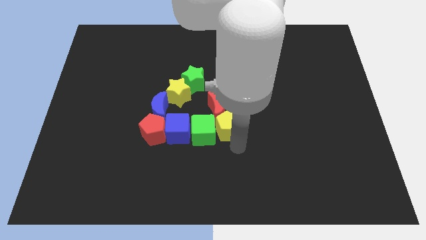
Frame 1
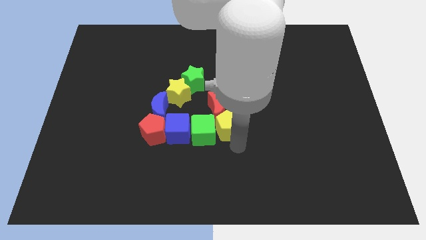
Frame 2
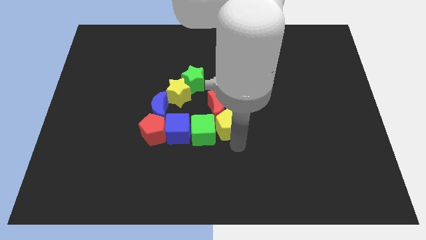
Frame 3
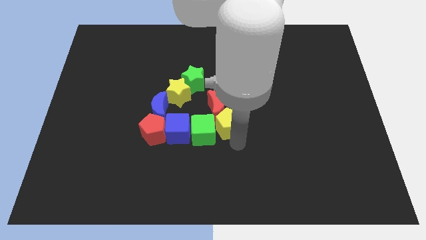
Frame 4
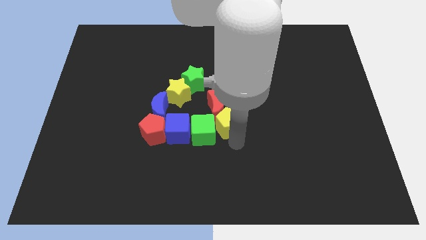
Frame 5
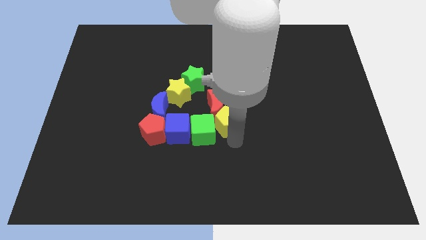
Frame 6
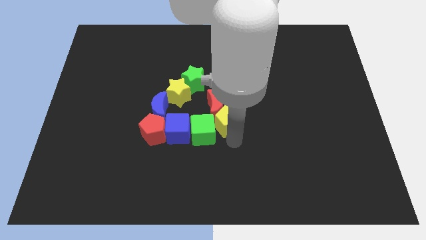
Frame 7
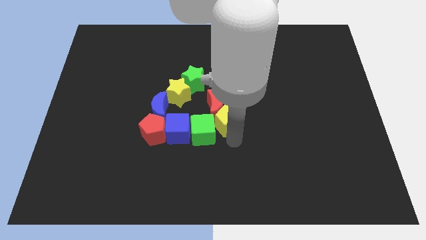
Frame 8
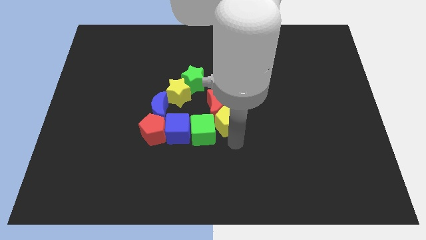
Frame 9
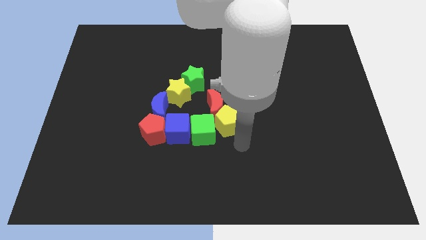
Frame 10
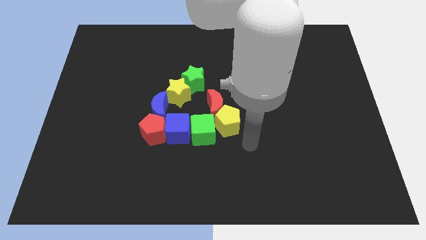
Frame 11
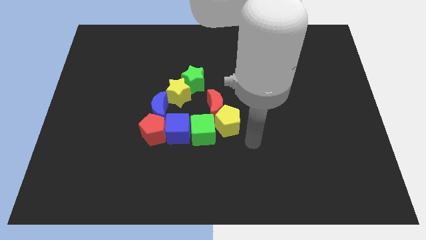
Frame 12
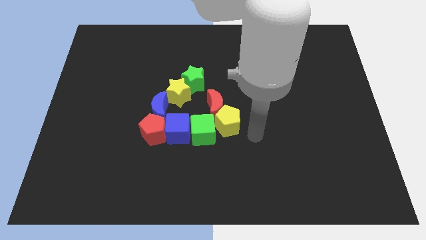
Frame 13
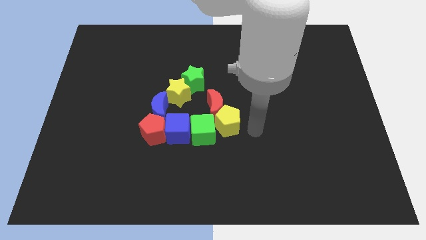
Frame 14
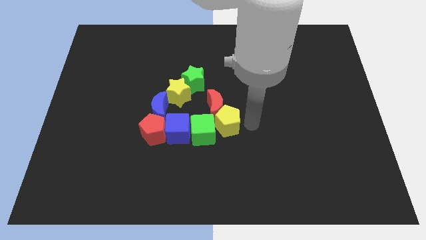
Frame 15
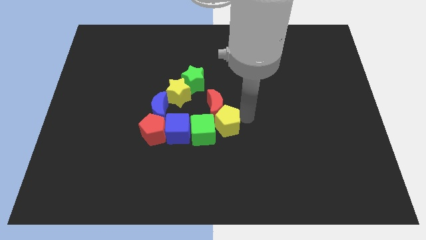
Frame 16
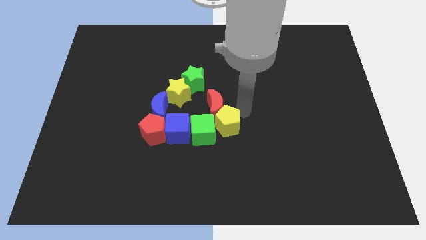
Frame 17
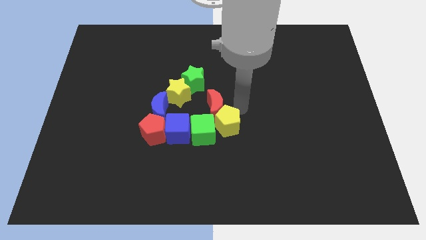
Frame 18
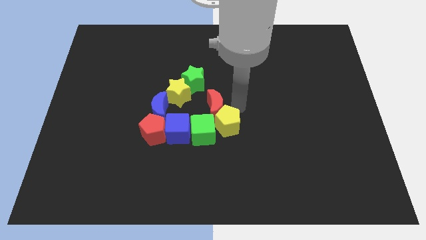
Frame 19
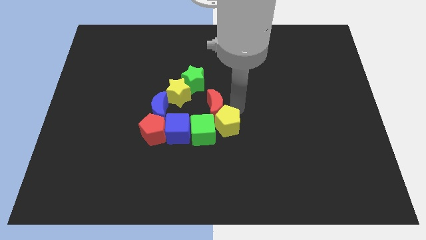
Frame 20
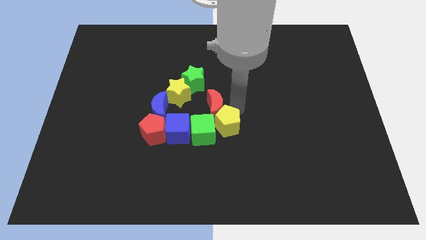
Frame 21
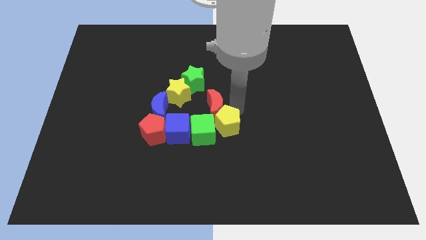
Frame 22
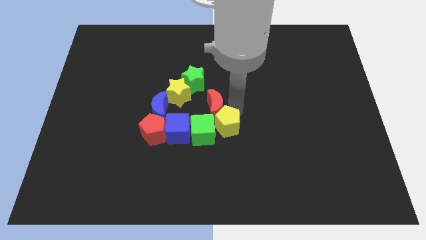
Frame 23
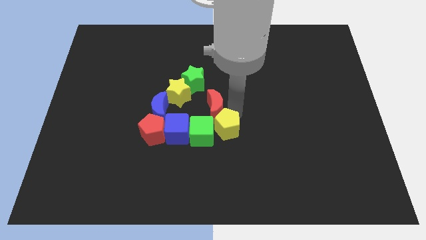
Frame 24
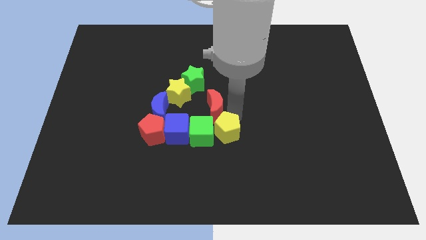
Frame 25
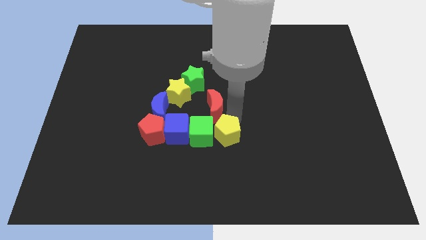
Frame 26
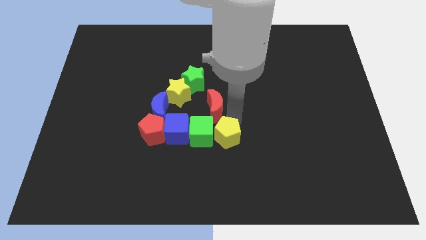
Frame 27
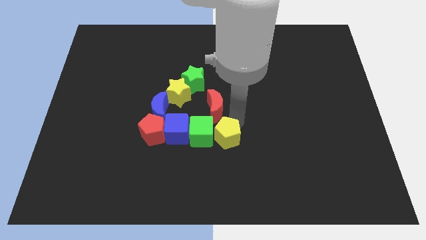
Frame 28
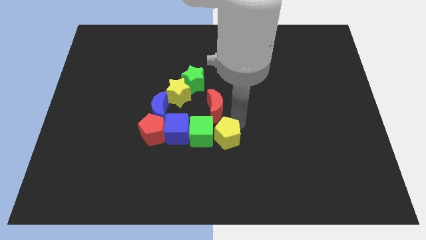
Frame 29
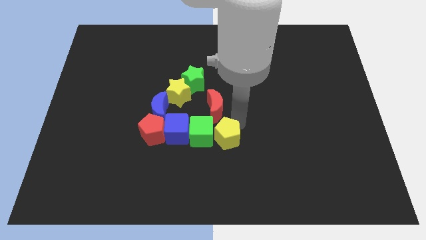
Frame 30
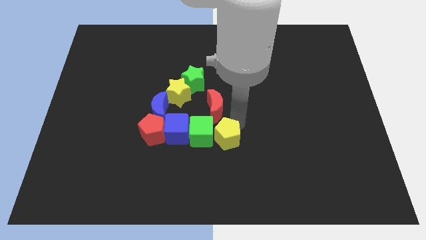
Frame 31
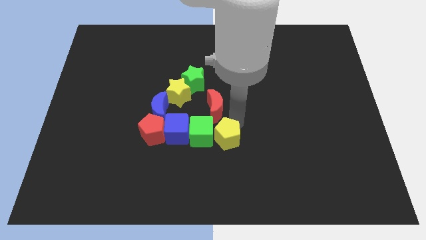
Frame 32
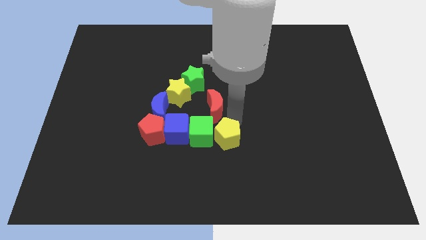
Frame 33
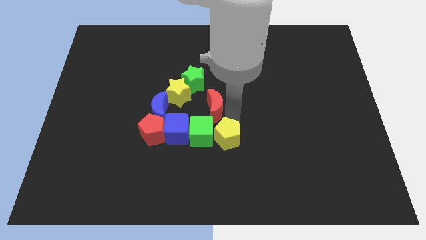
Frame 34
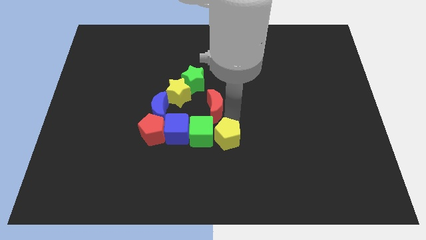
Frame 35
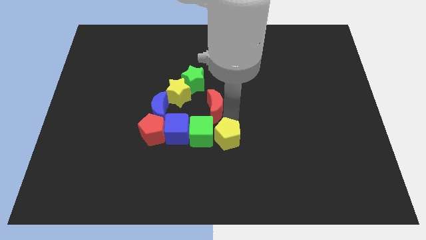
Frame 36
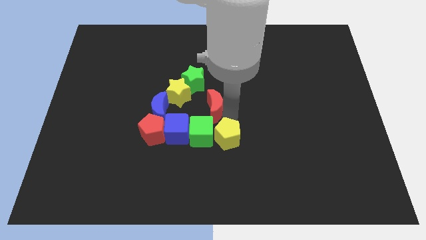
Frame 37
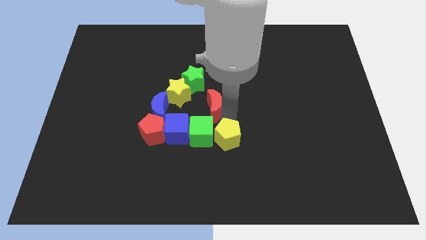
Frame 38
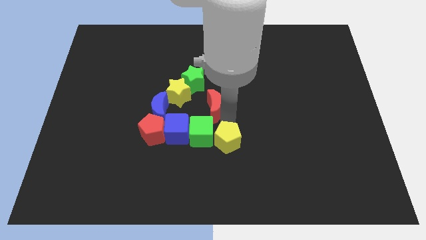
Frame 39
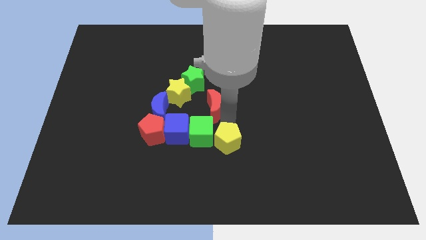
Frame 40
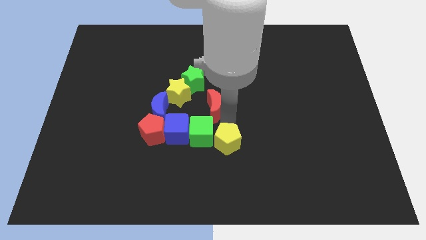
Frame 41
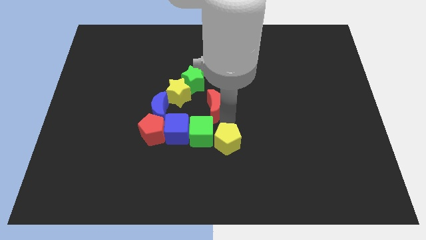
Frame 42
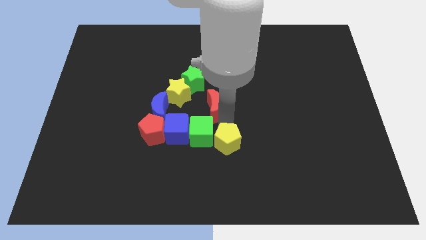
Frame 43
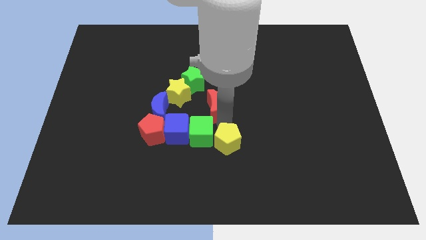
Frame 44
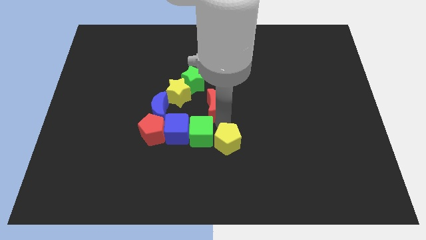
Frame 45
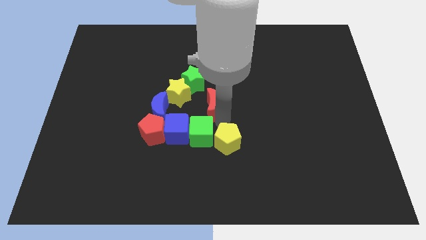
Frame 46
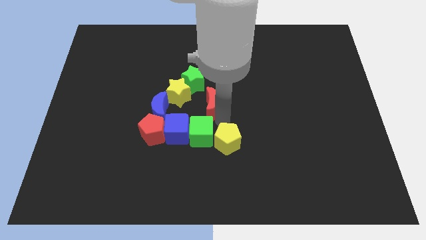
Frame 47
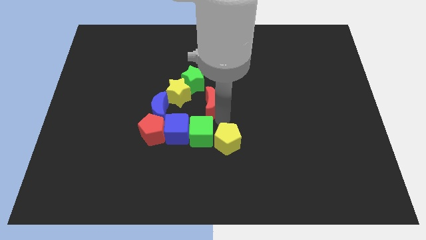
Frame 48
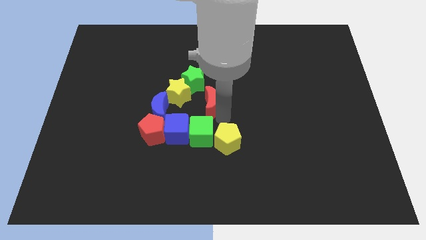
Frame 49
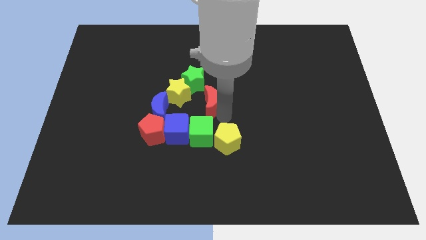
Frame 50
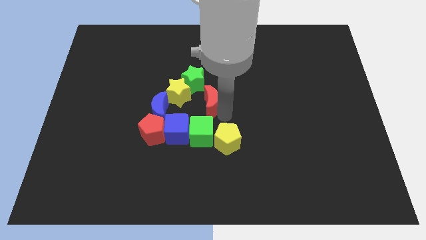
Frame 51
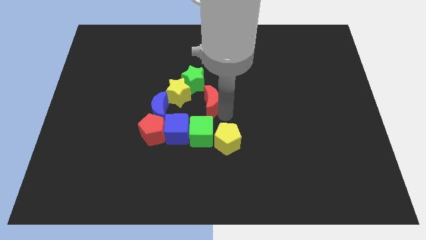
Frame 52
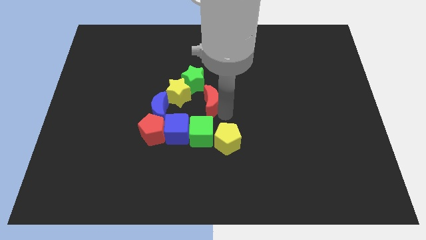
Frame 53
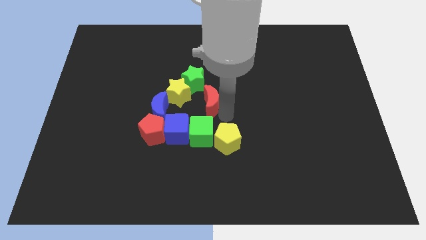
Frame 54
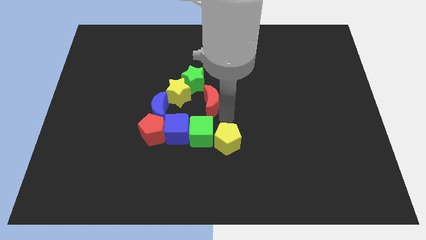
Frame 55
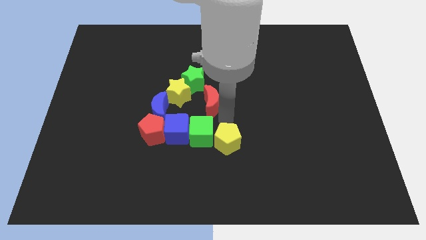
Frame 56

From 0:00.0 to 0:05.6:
separate the yellow pentagon and red moon

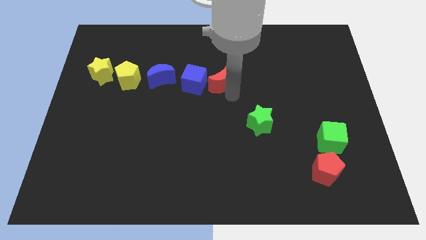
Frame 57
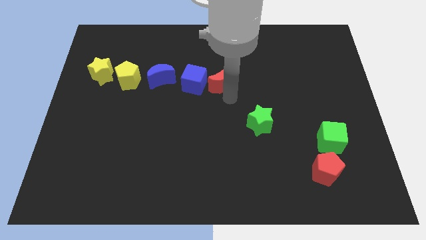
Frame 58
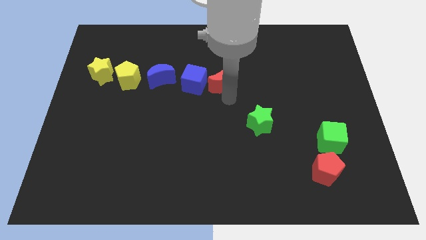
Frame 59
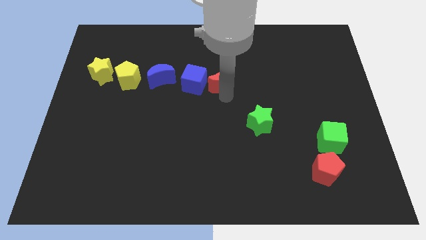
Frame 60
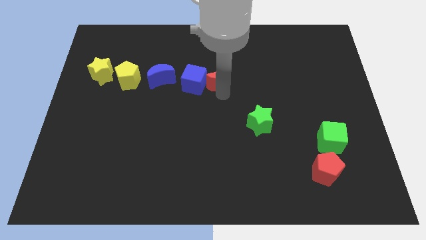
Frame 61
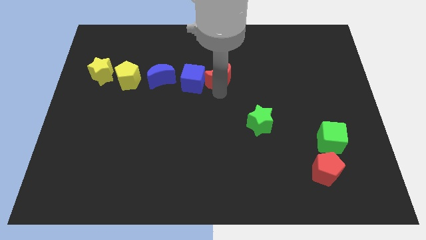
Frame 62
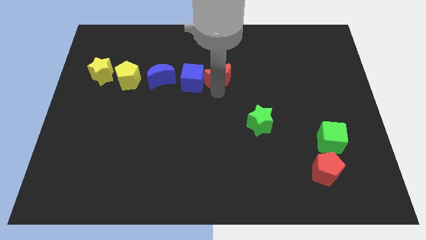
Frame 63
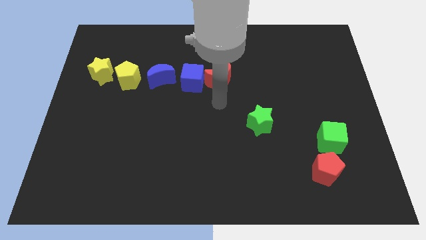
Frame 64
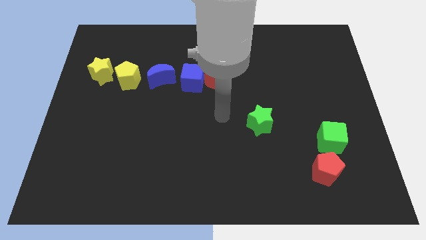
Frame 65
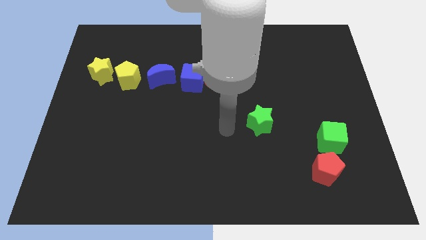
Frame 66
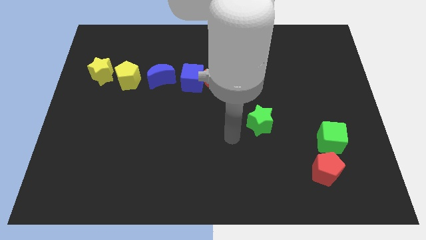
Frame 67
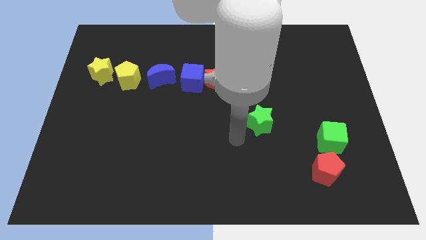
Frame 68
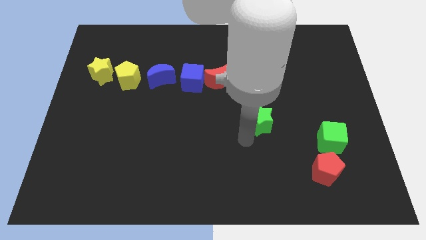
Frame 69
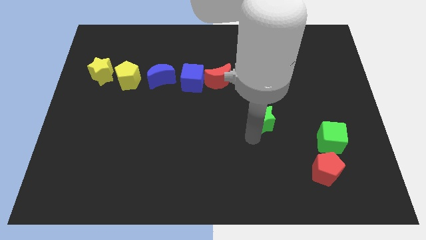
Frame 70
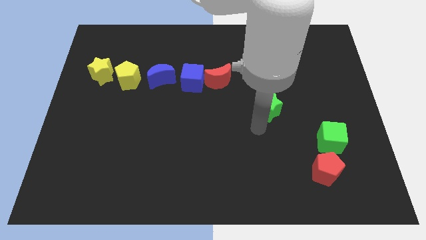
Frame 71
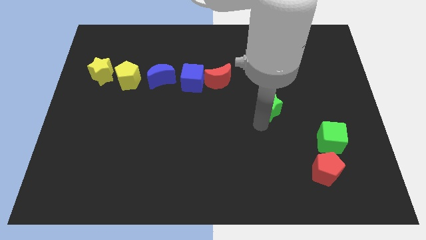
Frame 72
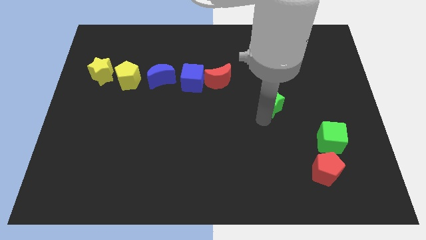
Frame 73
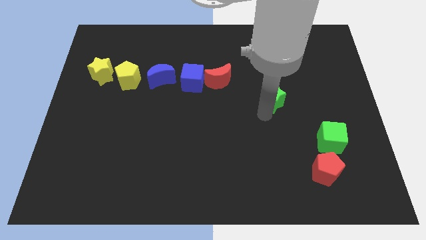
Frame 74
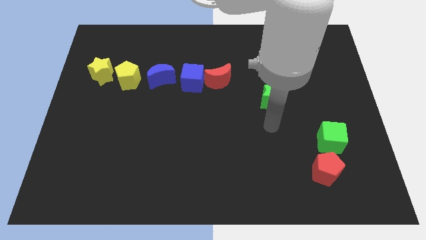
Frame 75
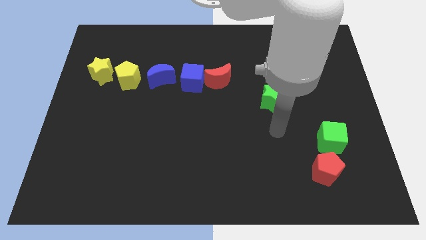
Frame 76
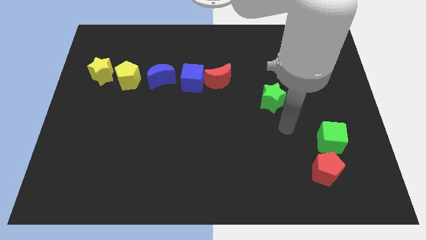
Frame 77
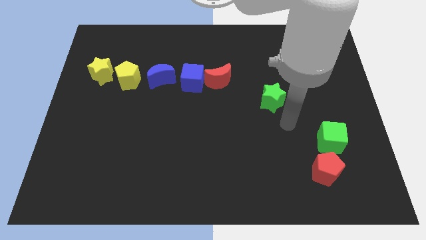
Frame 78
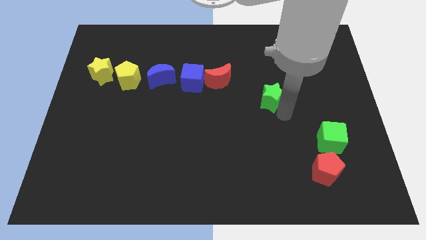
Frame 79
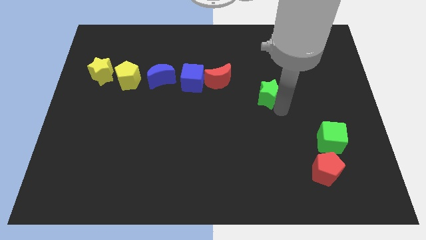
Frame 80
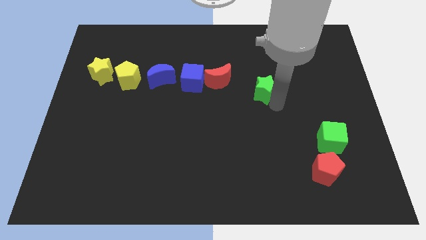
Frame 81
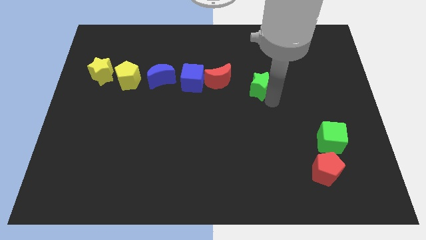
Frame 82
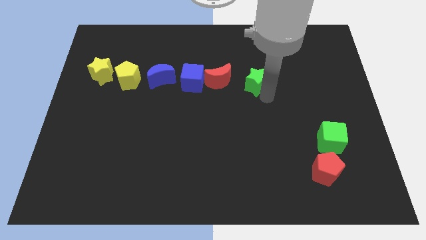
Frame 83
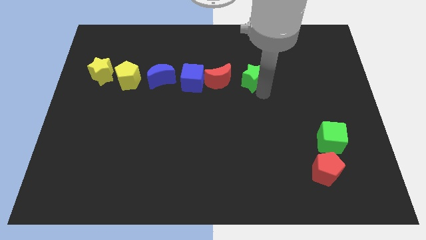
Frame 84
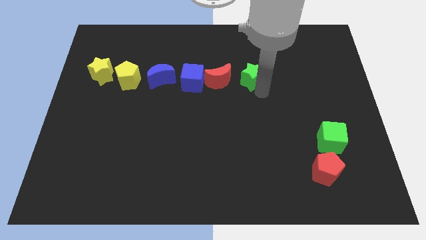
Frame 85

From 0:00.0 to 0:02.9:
place green star beside red crescent

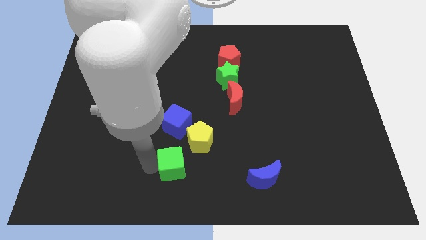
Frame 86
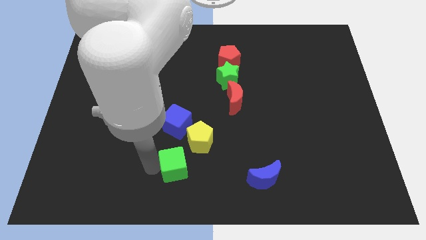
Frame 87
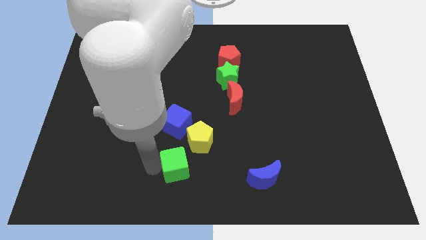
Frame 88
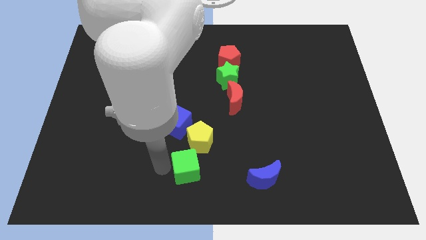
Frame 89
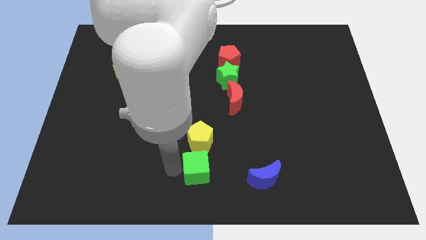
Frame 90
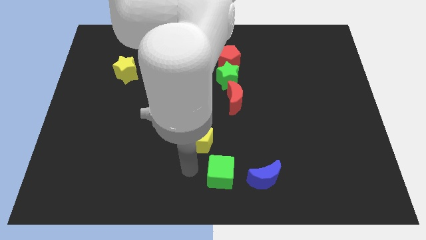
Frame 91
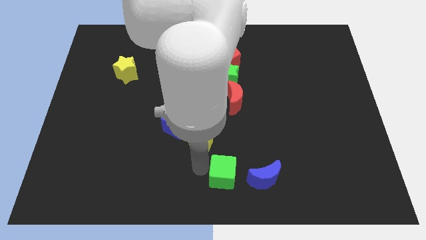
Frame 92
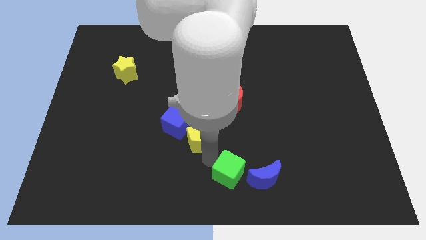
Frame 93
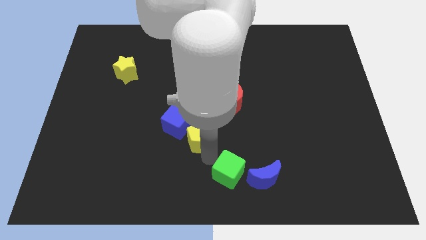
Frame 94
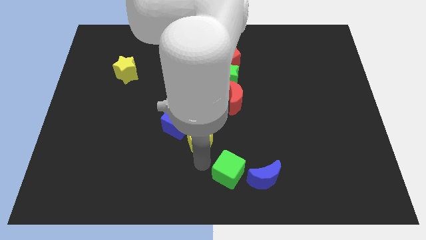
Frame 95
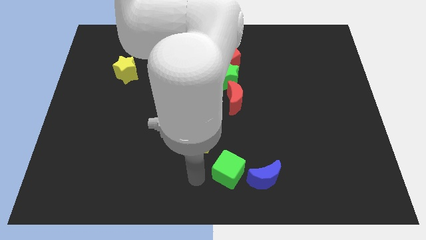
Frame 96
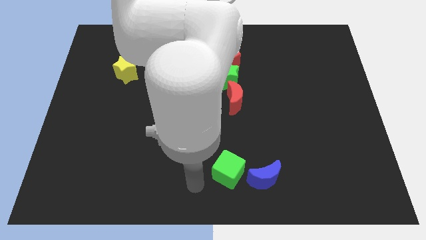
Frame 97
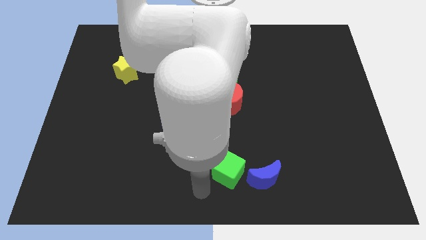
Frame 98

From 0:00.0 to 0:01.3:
push green cube into the blue moon
